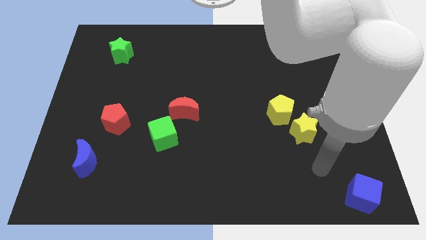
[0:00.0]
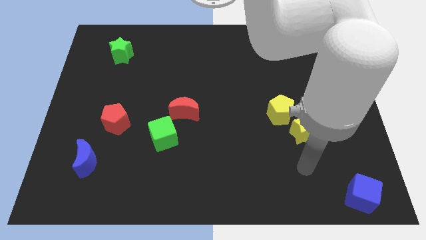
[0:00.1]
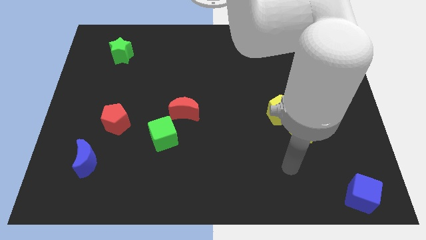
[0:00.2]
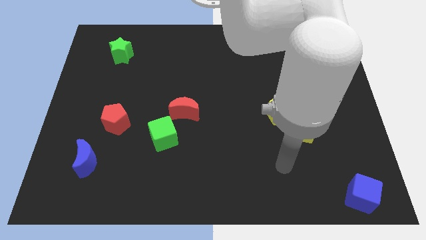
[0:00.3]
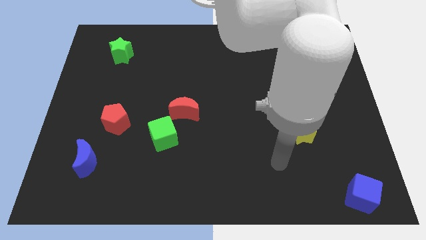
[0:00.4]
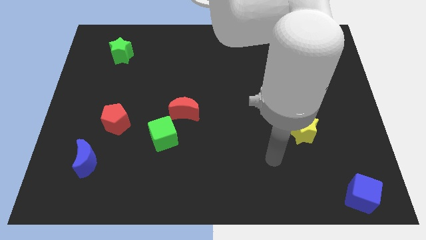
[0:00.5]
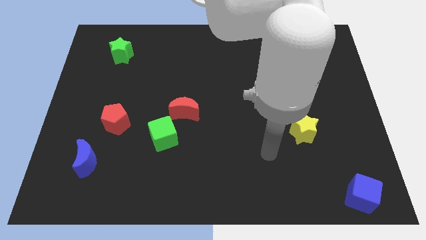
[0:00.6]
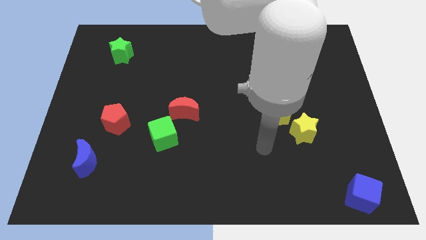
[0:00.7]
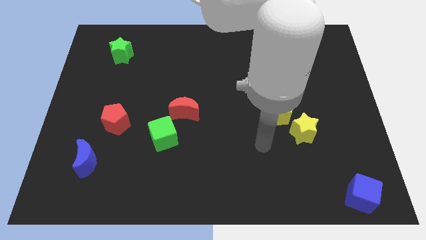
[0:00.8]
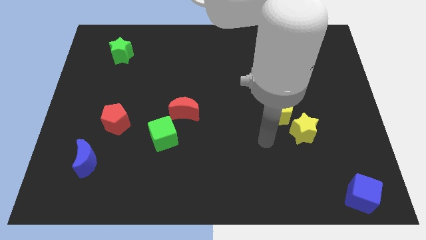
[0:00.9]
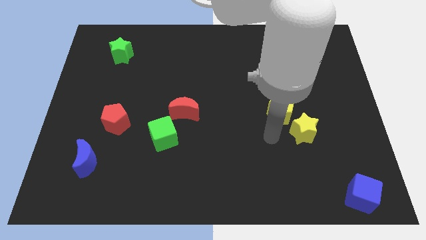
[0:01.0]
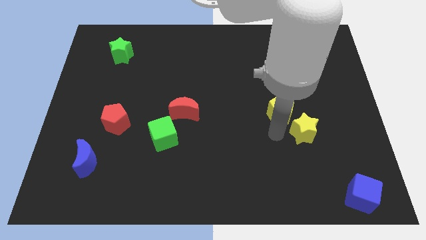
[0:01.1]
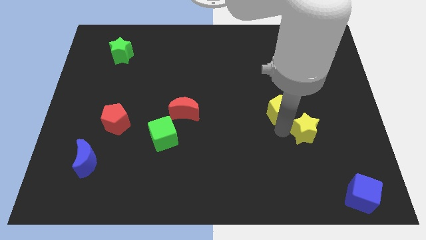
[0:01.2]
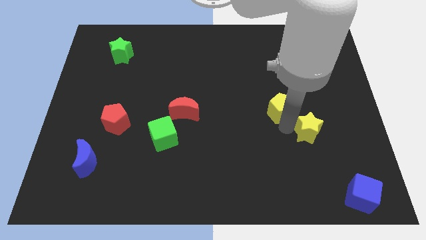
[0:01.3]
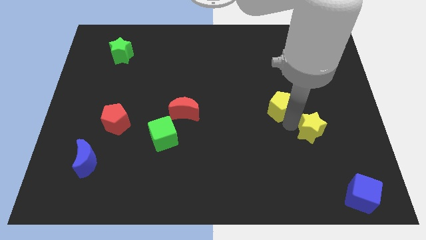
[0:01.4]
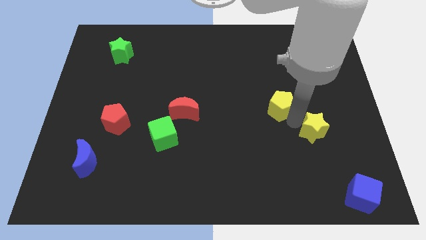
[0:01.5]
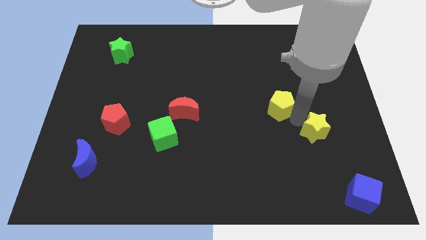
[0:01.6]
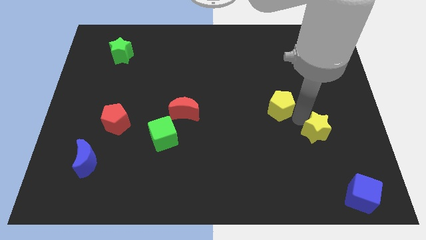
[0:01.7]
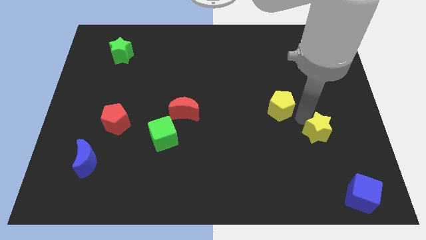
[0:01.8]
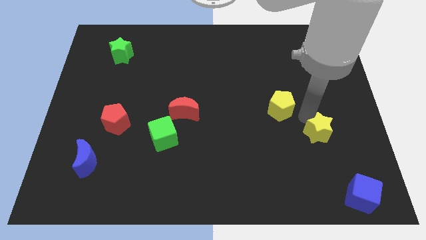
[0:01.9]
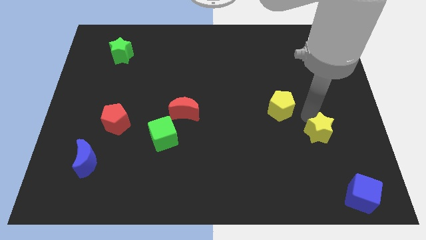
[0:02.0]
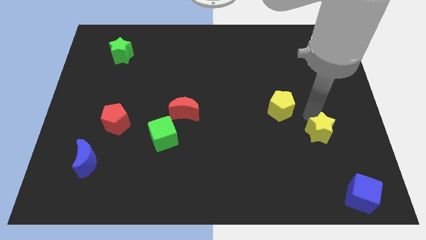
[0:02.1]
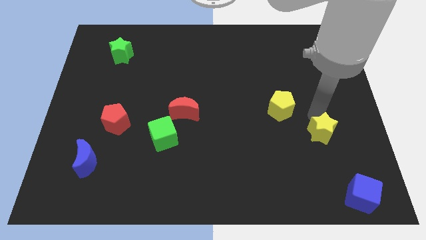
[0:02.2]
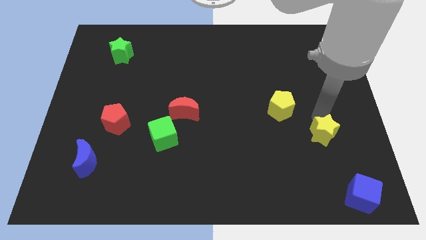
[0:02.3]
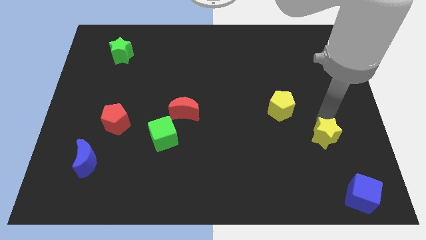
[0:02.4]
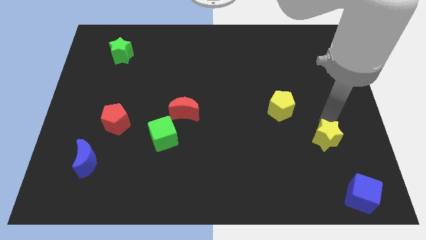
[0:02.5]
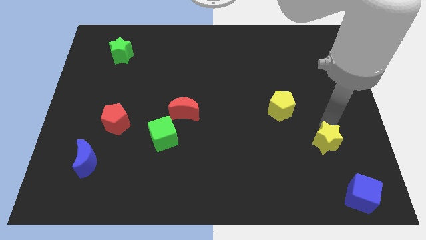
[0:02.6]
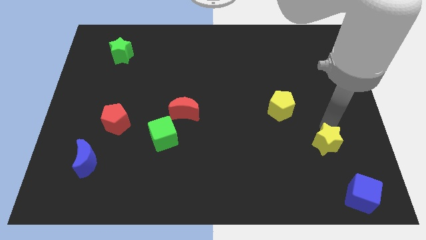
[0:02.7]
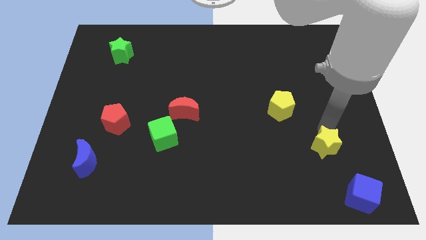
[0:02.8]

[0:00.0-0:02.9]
place the yellow star diagonally in between the yellow pentagon and the blue cube

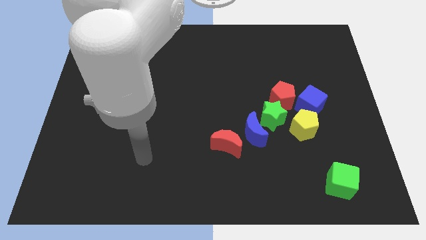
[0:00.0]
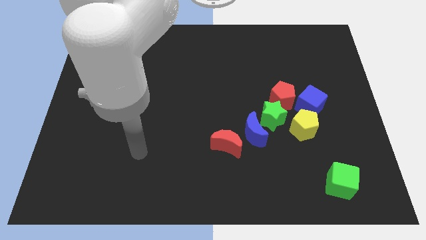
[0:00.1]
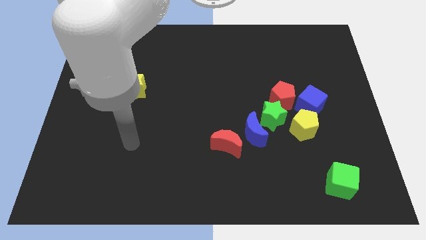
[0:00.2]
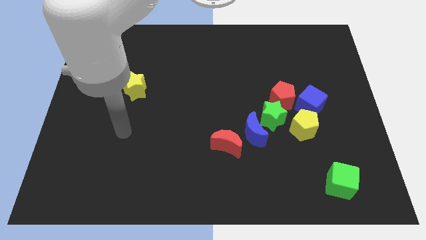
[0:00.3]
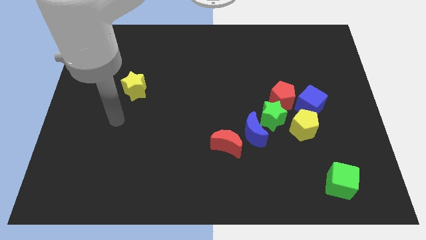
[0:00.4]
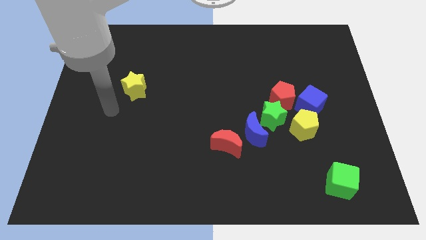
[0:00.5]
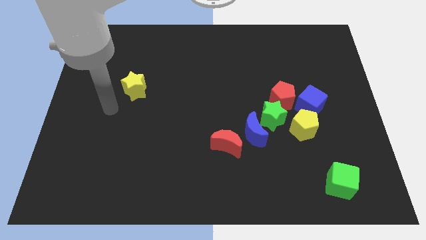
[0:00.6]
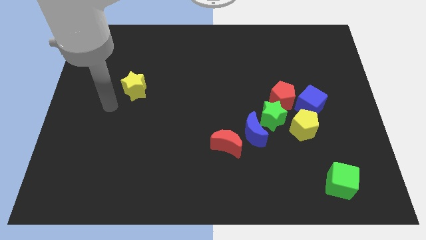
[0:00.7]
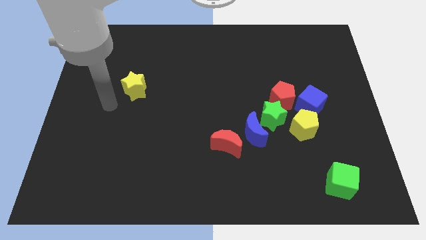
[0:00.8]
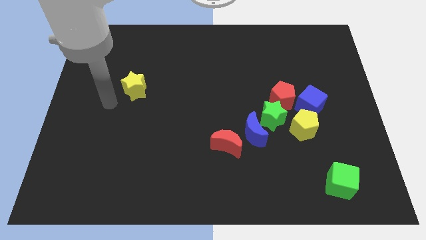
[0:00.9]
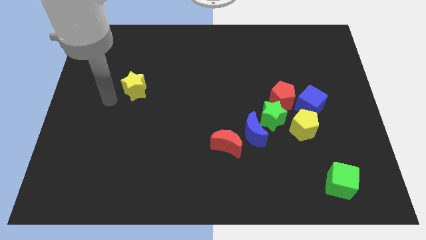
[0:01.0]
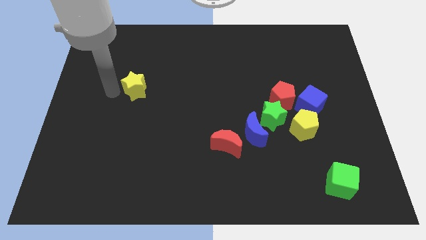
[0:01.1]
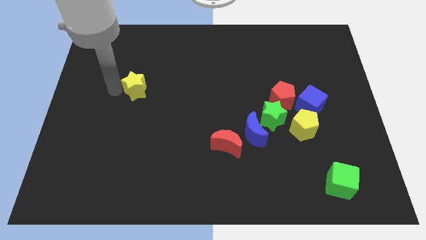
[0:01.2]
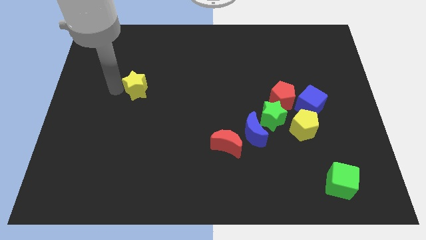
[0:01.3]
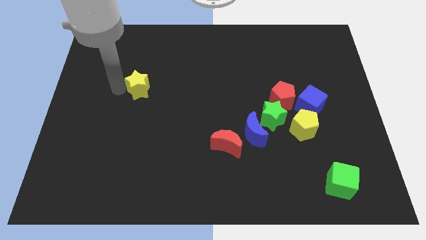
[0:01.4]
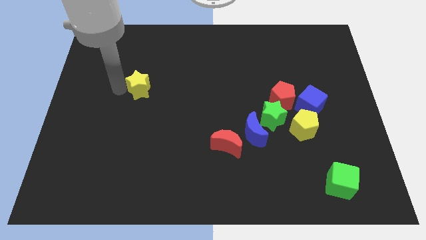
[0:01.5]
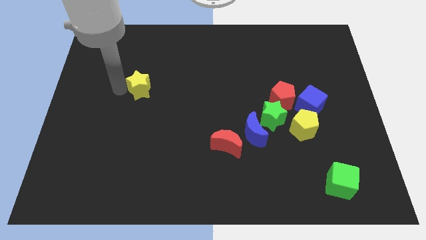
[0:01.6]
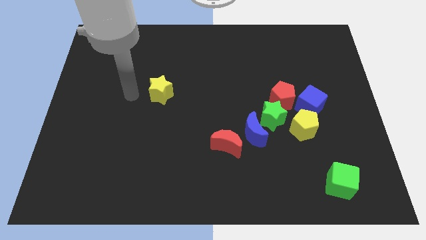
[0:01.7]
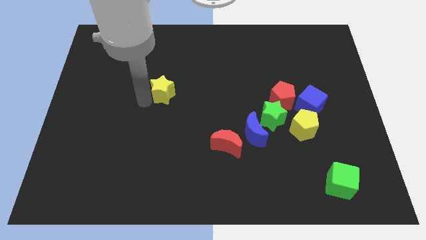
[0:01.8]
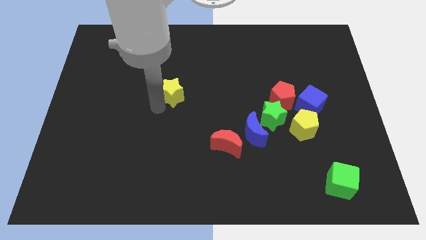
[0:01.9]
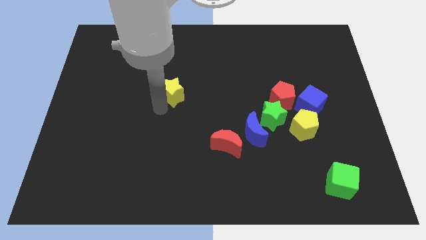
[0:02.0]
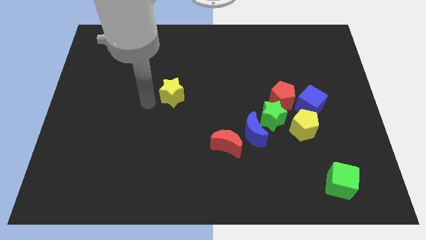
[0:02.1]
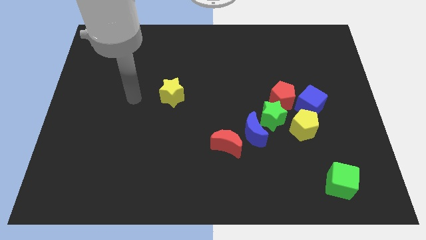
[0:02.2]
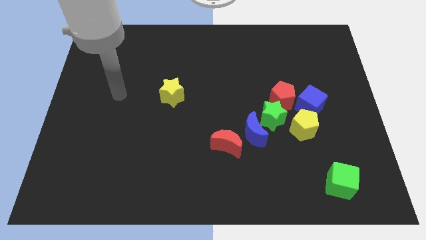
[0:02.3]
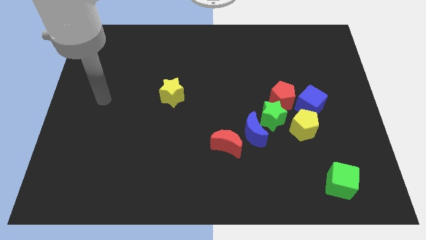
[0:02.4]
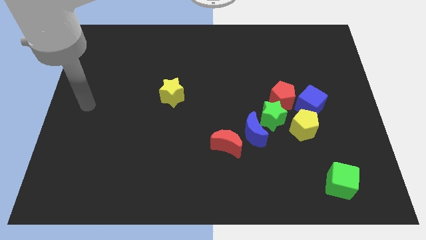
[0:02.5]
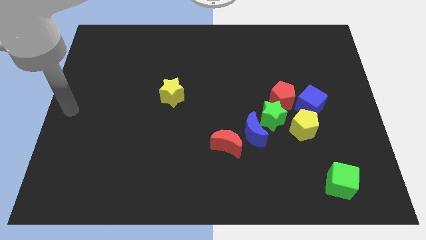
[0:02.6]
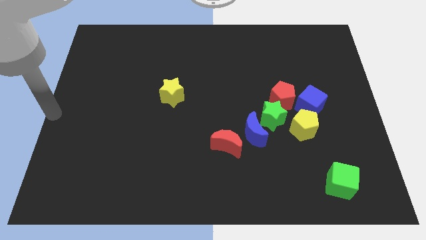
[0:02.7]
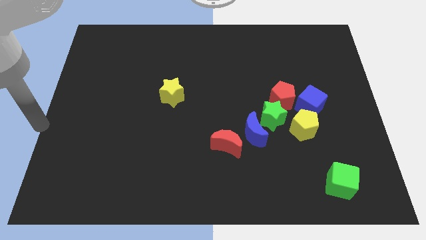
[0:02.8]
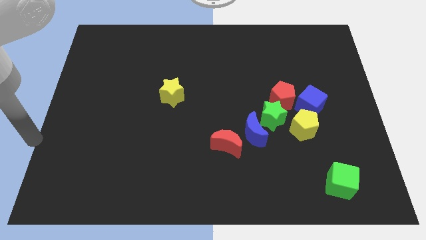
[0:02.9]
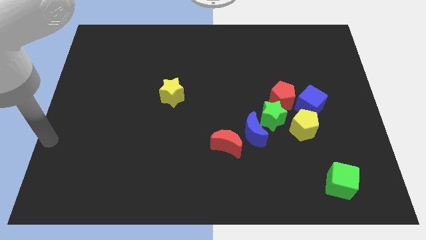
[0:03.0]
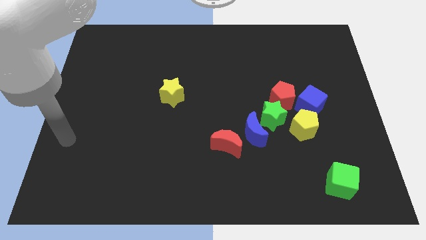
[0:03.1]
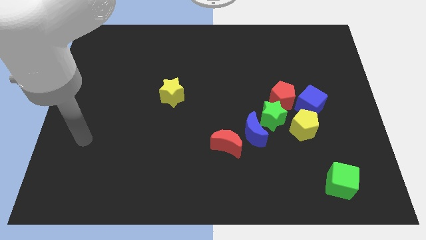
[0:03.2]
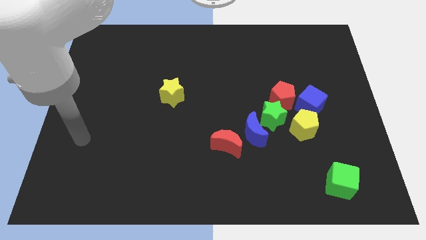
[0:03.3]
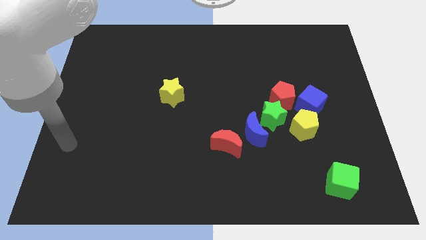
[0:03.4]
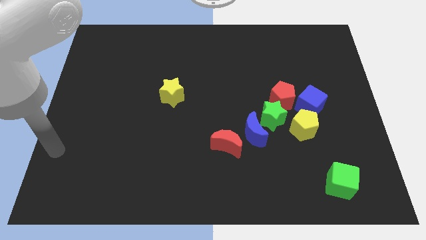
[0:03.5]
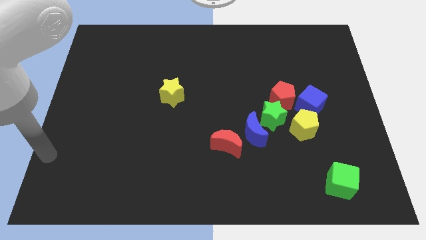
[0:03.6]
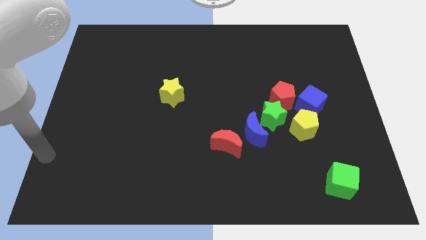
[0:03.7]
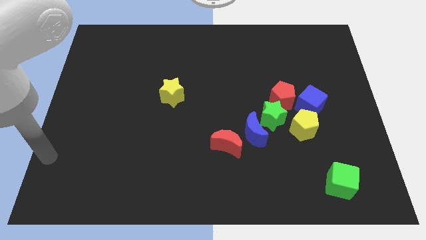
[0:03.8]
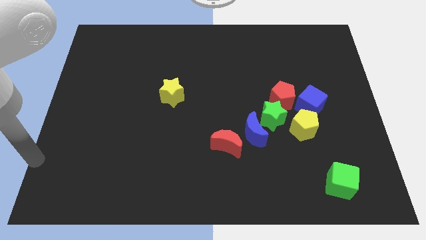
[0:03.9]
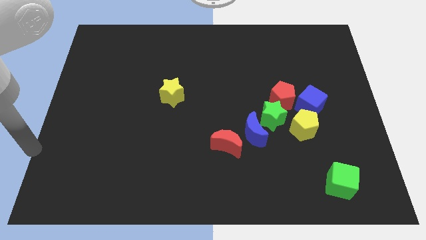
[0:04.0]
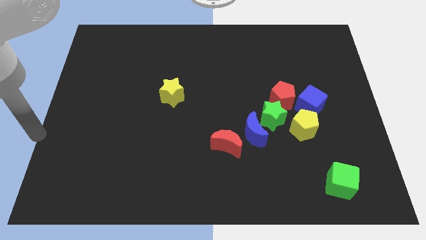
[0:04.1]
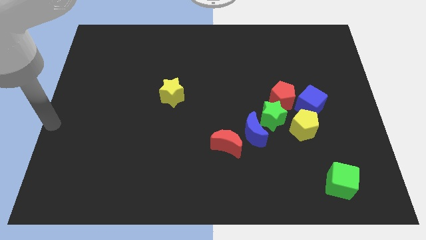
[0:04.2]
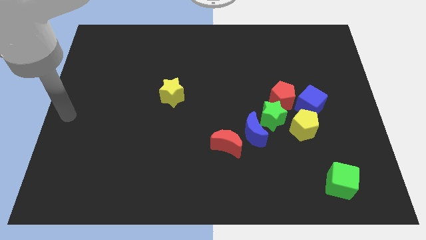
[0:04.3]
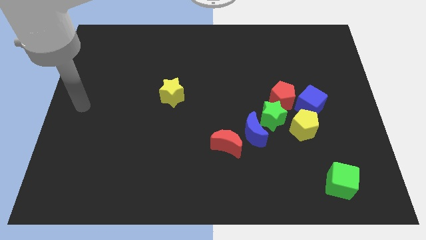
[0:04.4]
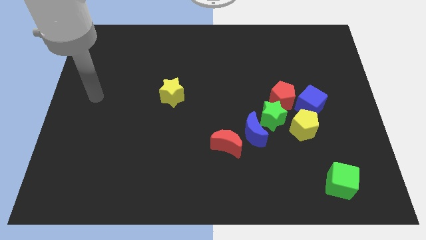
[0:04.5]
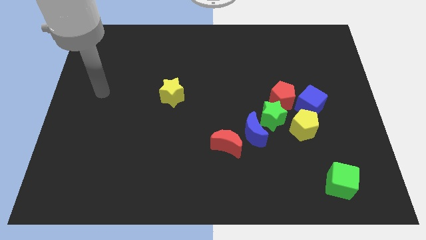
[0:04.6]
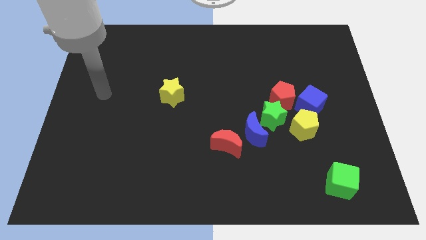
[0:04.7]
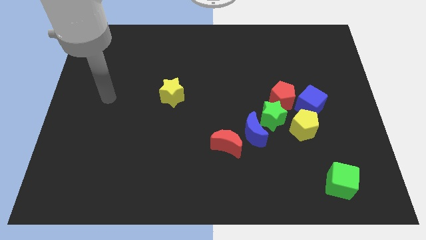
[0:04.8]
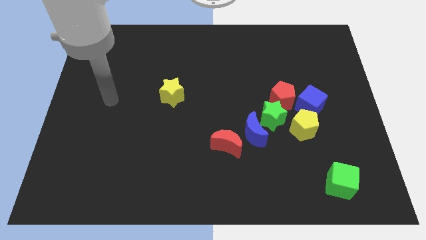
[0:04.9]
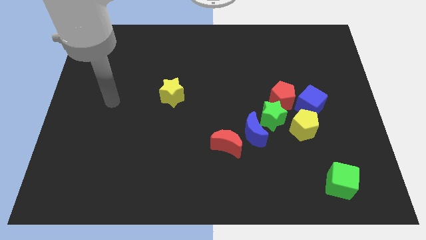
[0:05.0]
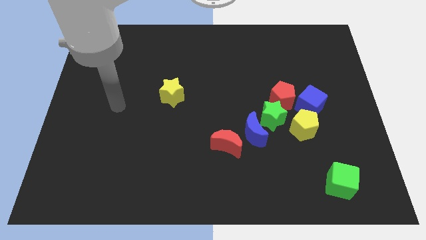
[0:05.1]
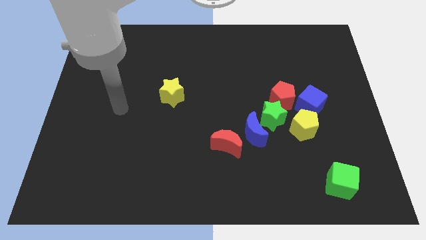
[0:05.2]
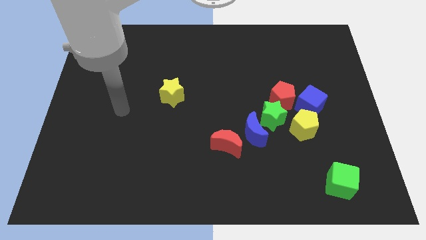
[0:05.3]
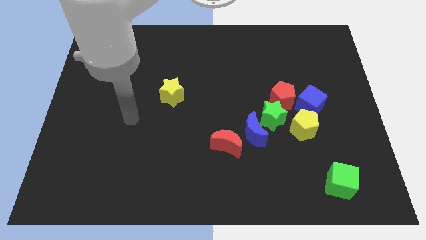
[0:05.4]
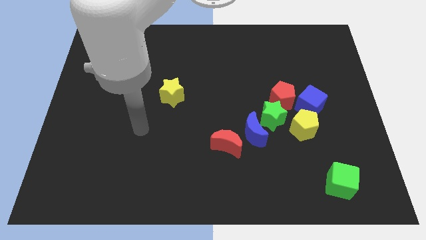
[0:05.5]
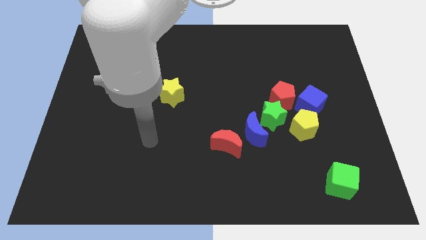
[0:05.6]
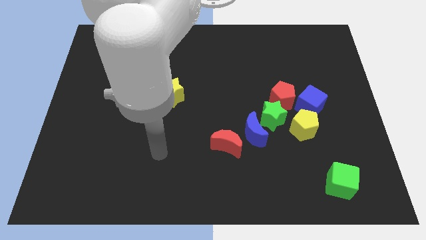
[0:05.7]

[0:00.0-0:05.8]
push the yellow star slightly towards the center of the board

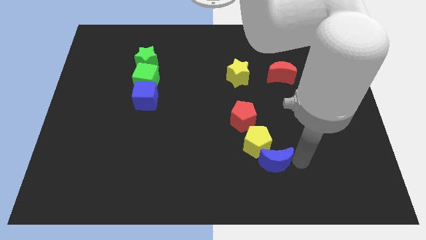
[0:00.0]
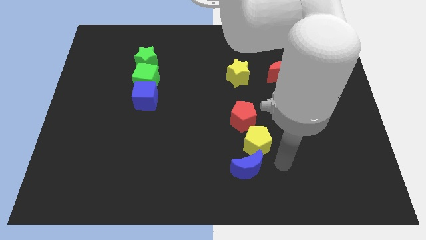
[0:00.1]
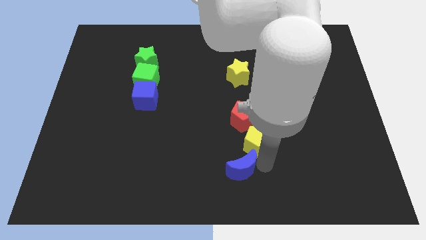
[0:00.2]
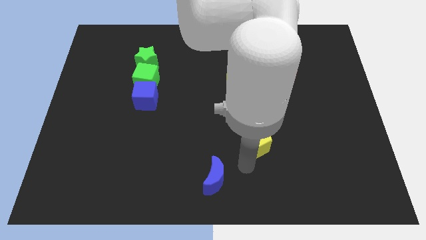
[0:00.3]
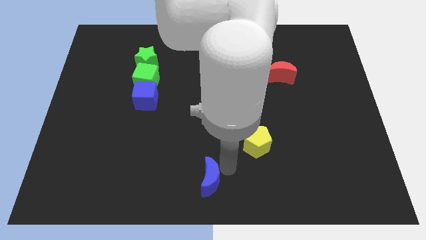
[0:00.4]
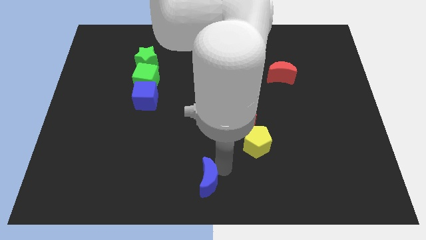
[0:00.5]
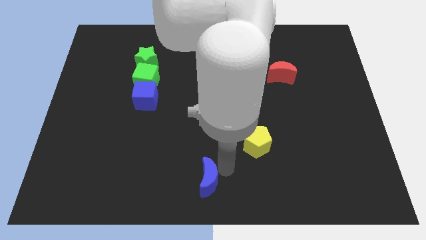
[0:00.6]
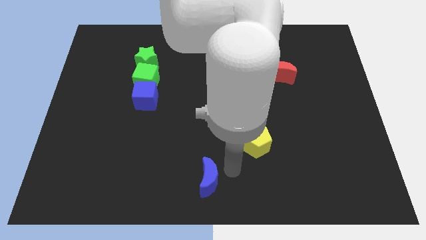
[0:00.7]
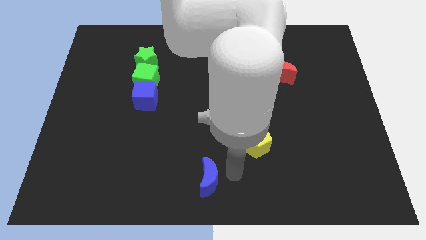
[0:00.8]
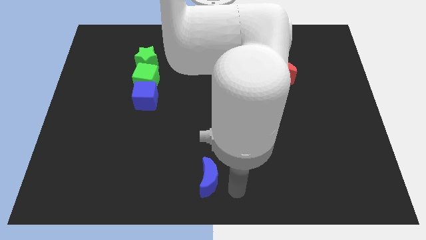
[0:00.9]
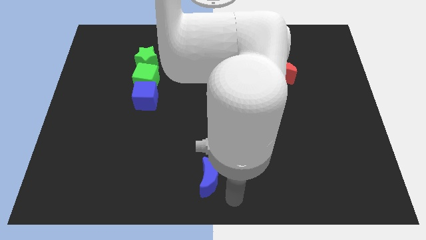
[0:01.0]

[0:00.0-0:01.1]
move blue moon away from the yellow pentagon
